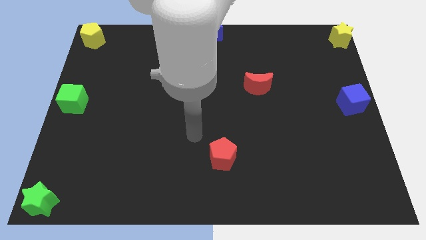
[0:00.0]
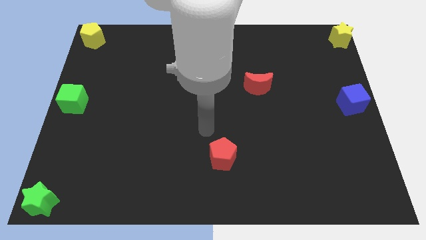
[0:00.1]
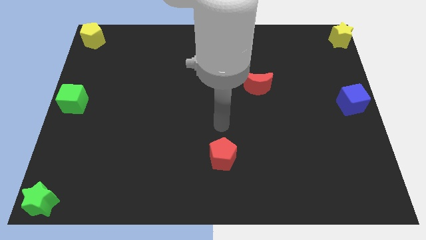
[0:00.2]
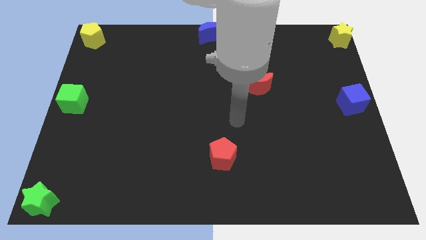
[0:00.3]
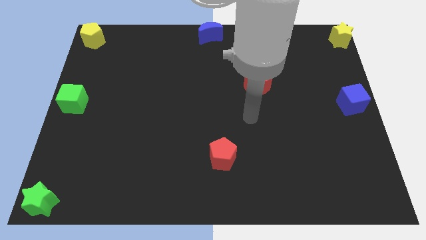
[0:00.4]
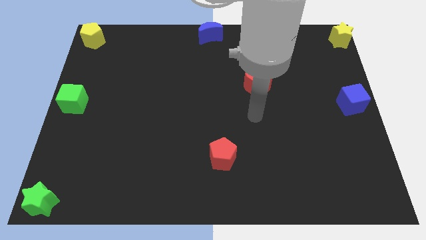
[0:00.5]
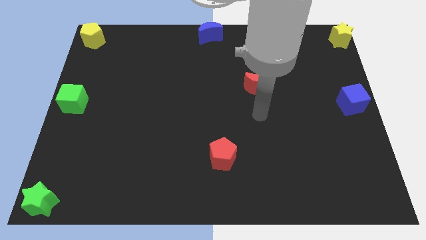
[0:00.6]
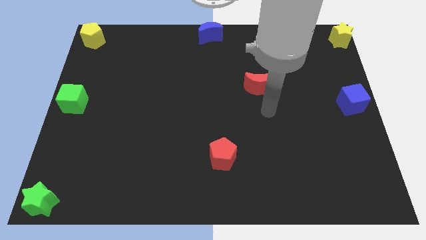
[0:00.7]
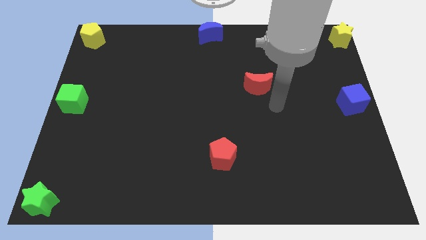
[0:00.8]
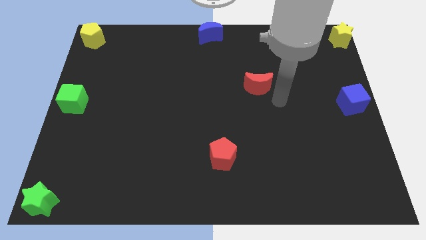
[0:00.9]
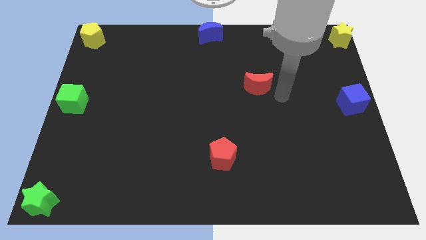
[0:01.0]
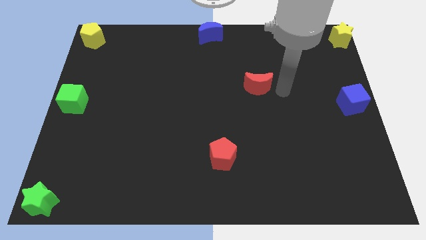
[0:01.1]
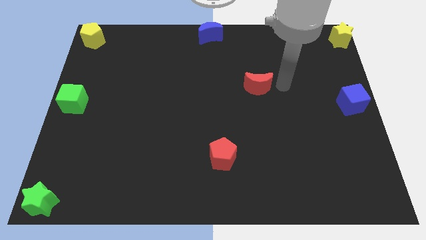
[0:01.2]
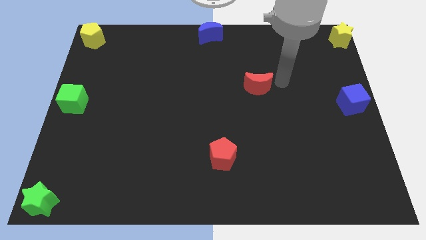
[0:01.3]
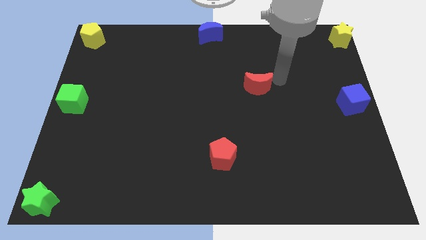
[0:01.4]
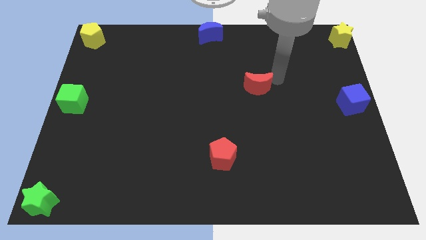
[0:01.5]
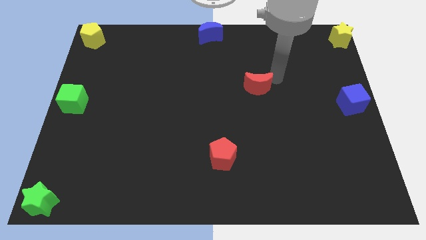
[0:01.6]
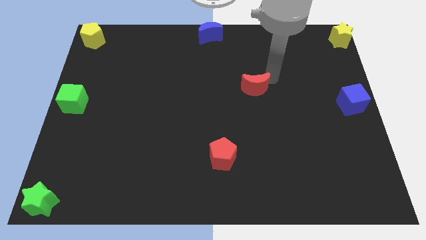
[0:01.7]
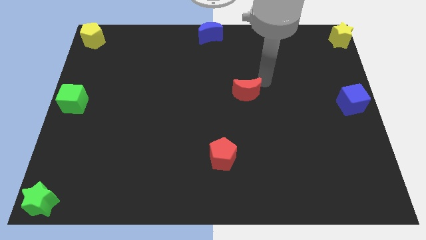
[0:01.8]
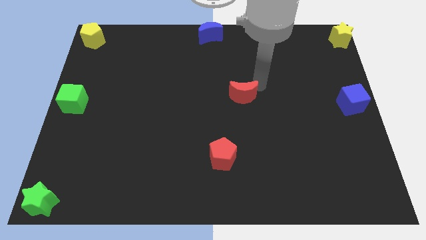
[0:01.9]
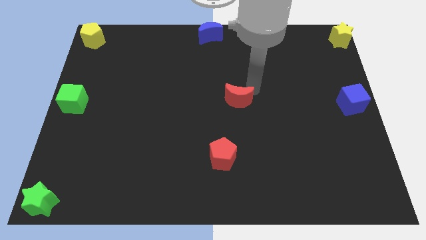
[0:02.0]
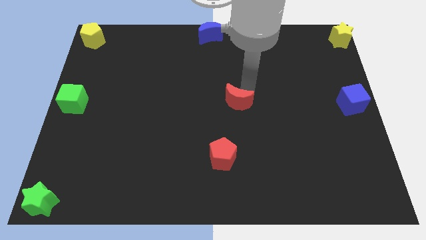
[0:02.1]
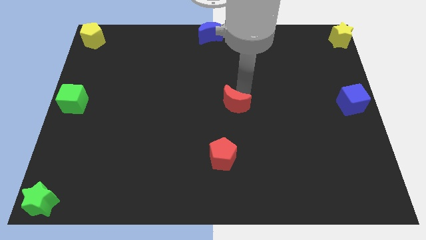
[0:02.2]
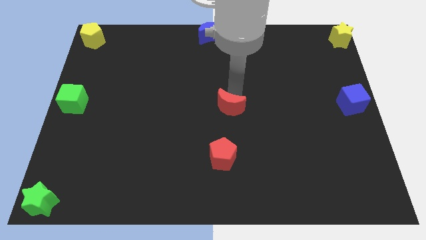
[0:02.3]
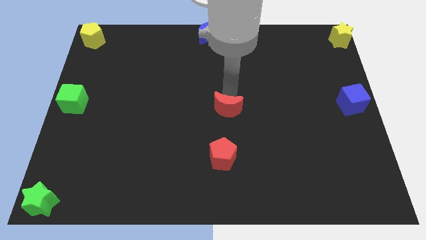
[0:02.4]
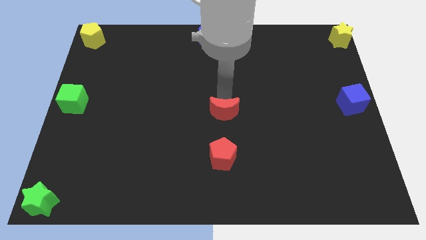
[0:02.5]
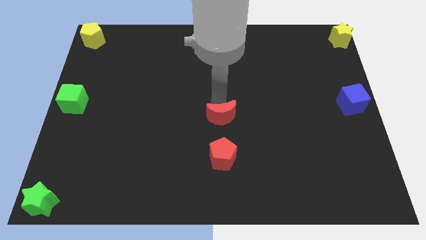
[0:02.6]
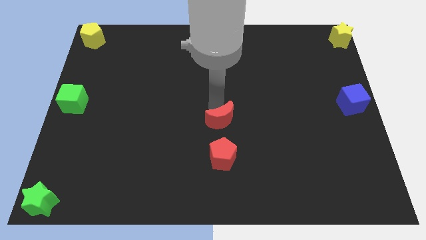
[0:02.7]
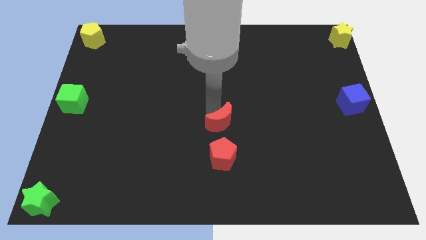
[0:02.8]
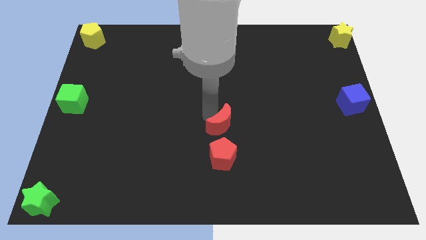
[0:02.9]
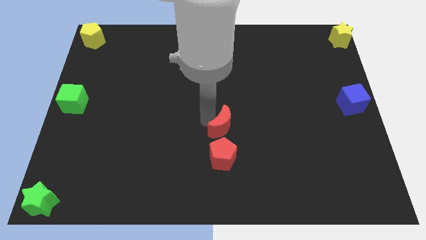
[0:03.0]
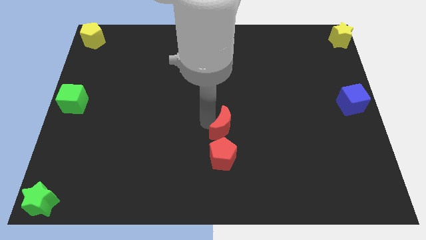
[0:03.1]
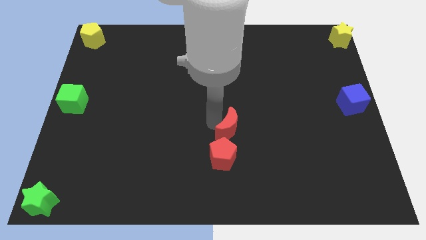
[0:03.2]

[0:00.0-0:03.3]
move the red crescent to the top of red pentagon

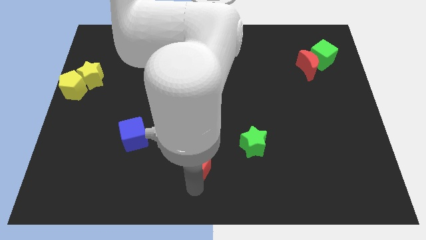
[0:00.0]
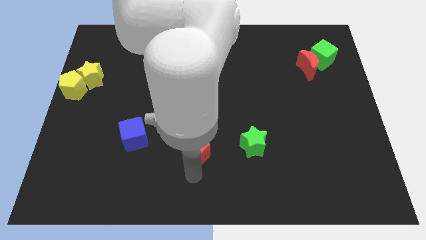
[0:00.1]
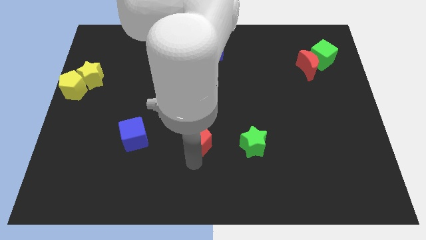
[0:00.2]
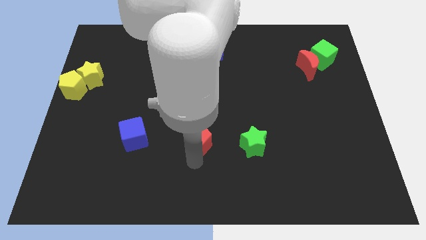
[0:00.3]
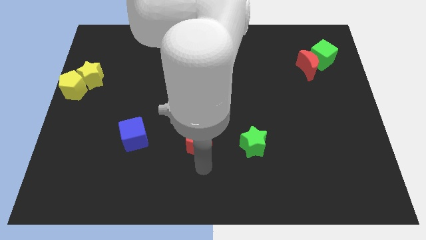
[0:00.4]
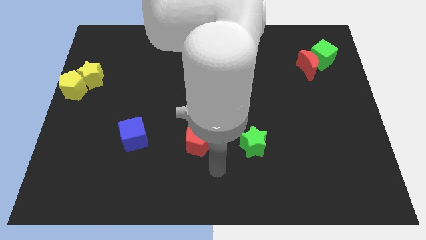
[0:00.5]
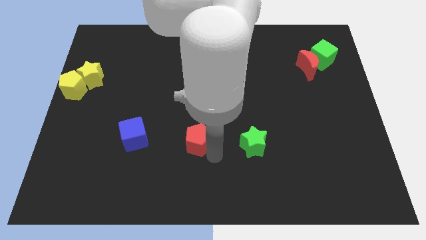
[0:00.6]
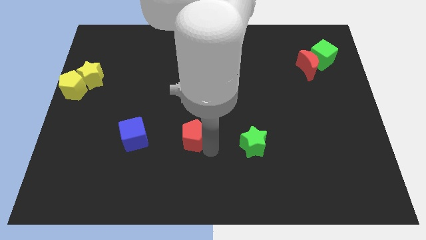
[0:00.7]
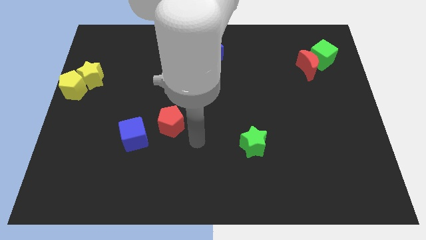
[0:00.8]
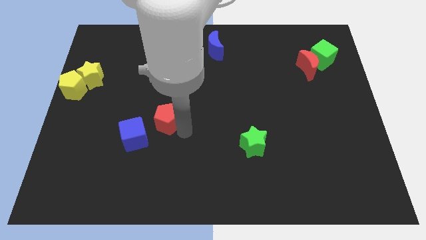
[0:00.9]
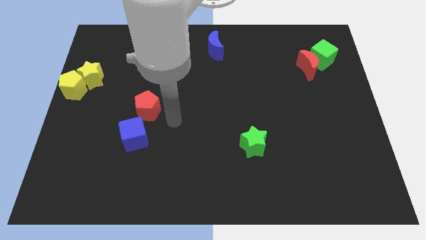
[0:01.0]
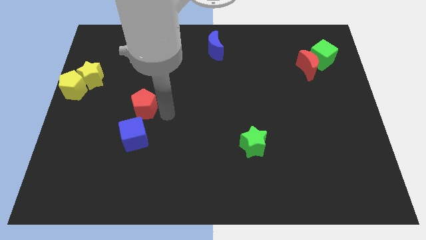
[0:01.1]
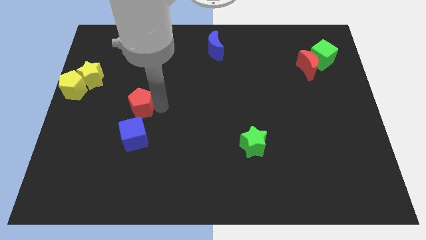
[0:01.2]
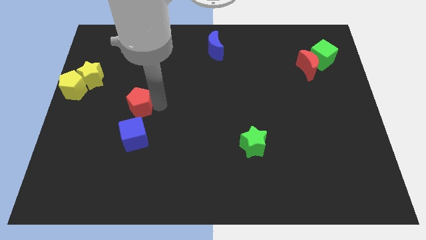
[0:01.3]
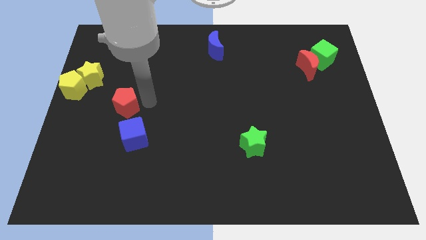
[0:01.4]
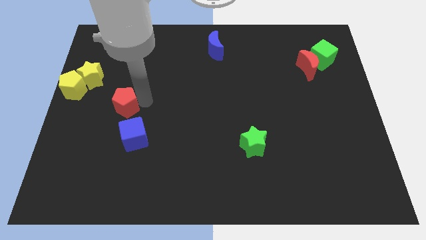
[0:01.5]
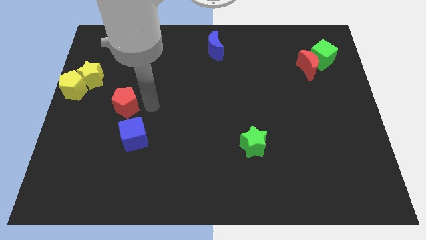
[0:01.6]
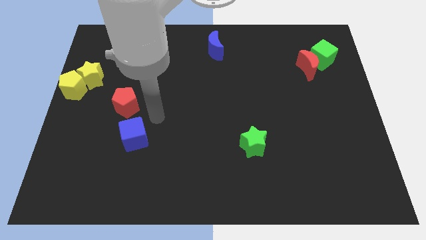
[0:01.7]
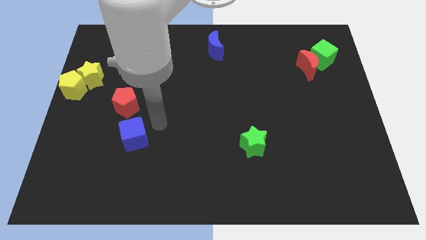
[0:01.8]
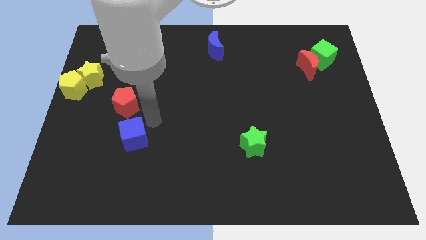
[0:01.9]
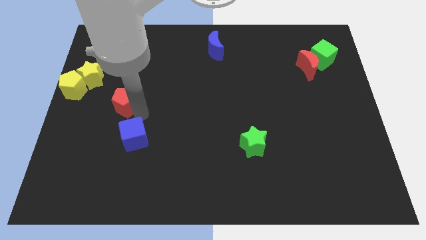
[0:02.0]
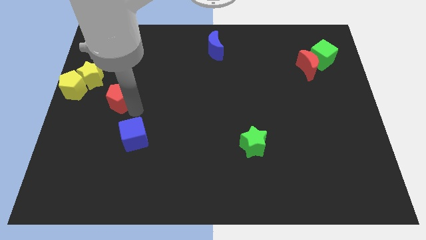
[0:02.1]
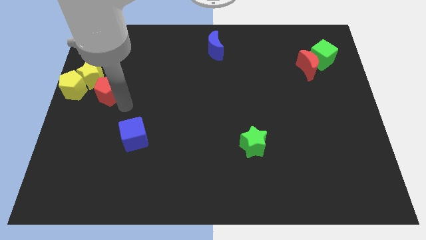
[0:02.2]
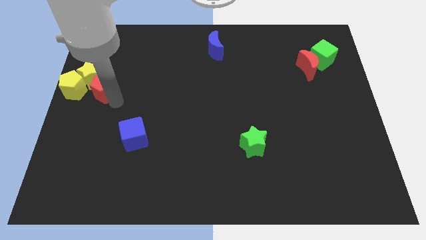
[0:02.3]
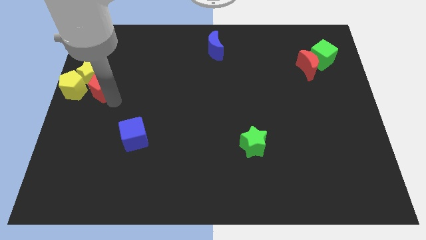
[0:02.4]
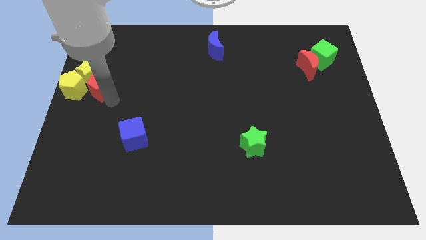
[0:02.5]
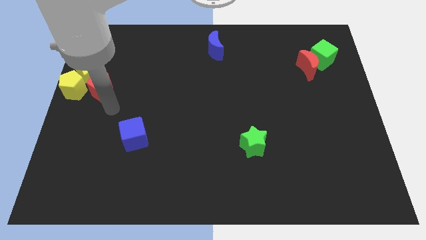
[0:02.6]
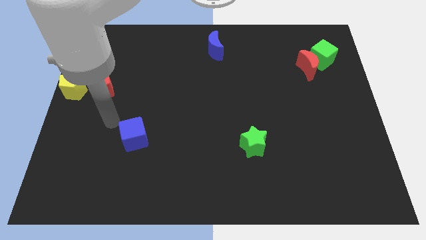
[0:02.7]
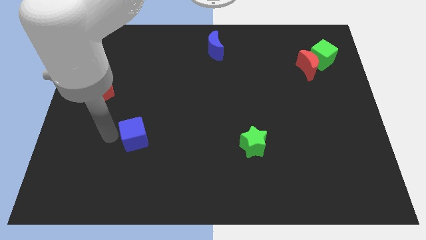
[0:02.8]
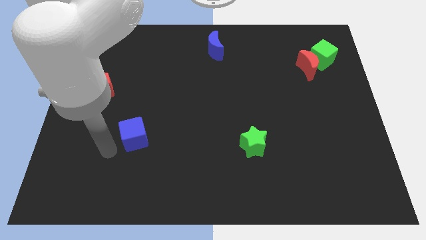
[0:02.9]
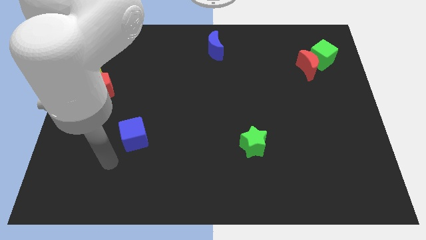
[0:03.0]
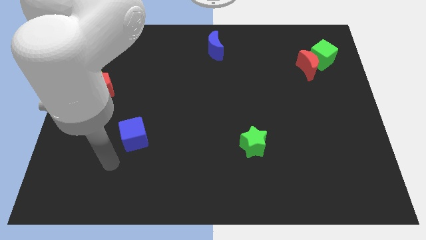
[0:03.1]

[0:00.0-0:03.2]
push red pentagon into the yellow blocks

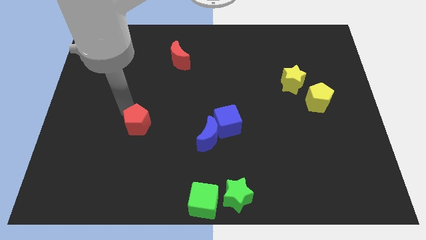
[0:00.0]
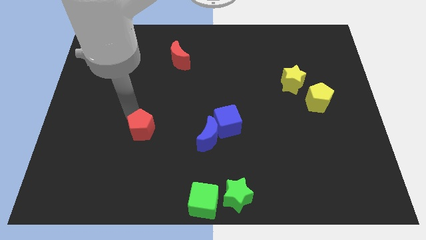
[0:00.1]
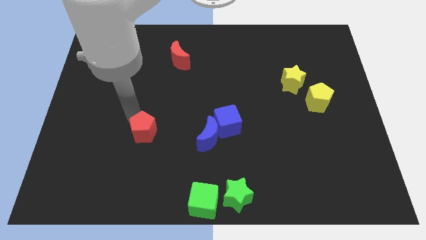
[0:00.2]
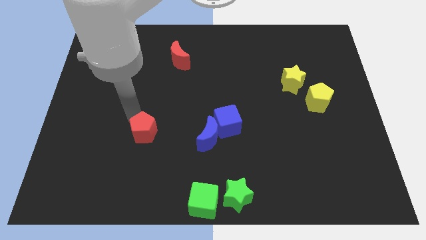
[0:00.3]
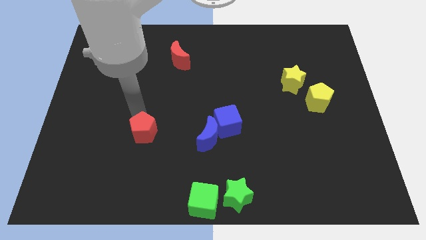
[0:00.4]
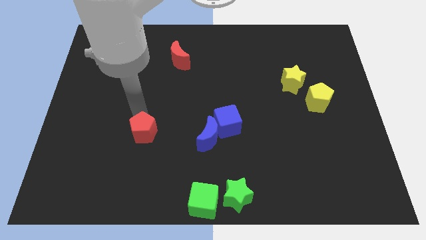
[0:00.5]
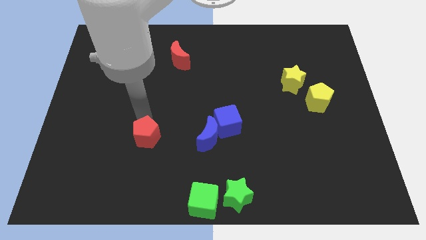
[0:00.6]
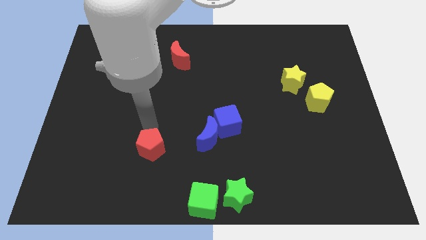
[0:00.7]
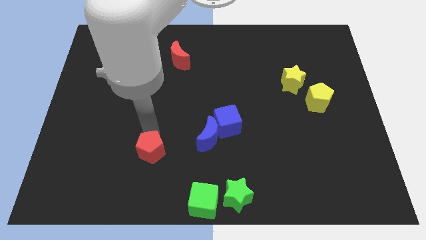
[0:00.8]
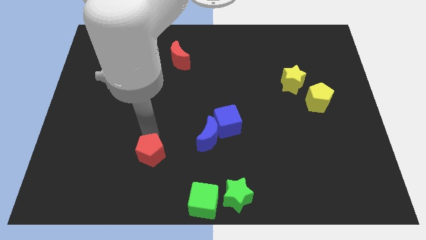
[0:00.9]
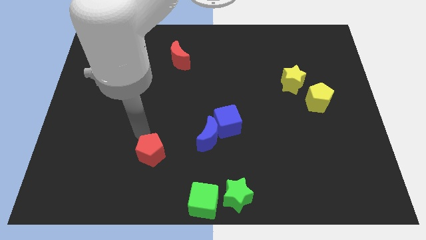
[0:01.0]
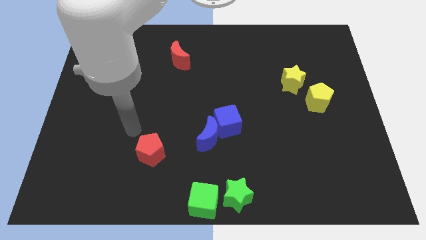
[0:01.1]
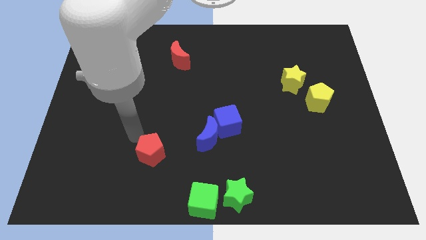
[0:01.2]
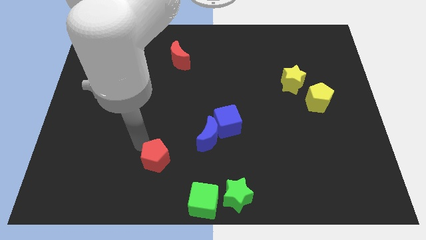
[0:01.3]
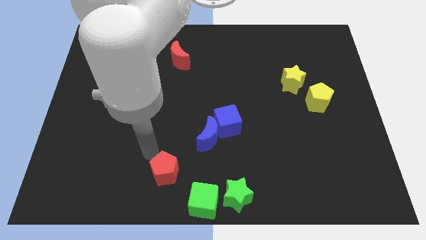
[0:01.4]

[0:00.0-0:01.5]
push the red pentagon slightly downwards

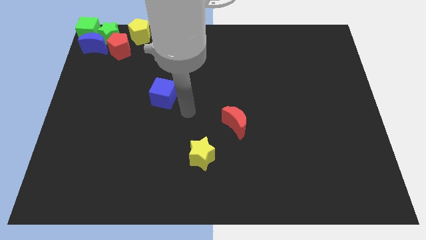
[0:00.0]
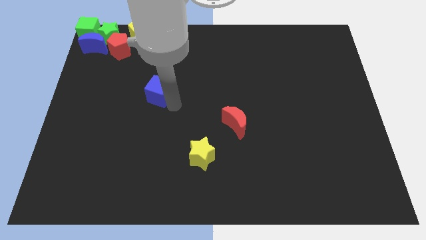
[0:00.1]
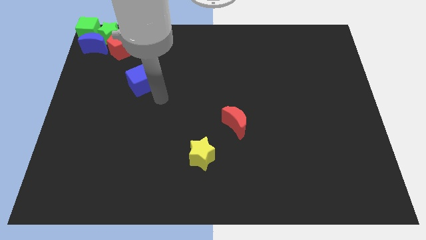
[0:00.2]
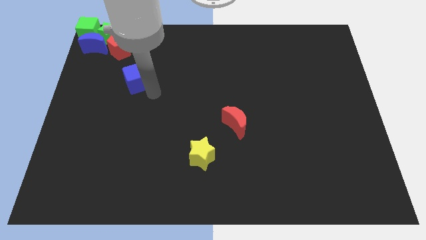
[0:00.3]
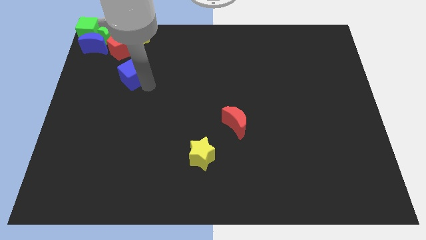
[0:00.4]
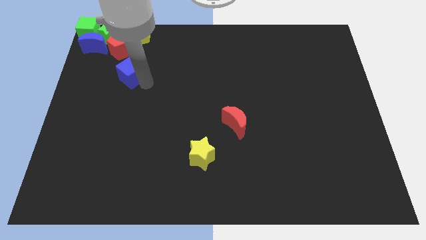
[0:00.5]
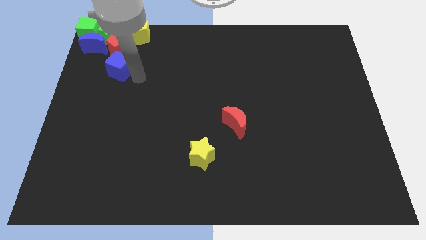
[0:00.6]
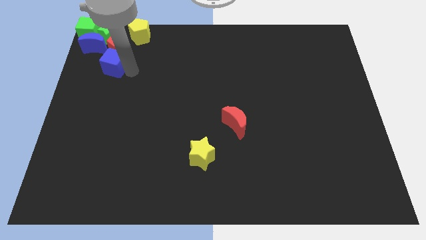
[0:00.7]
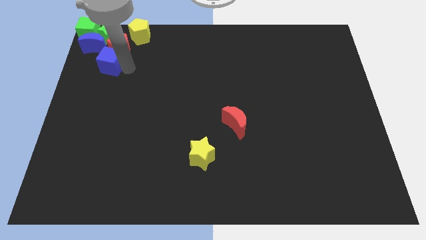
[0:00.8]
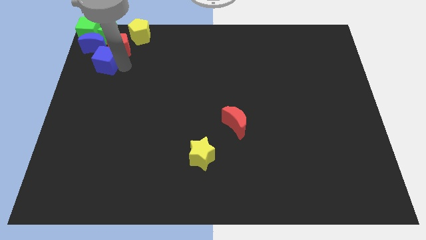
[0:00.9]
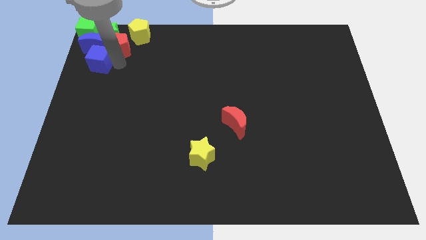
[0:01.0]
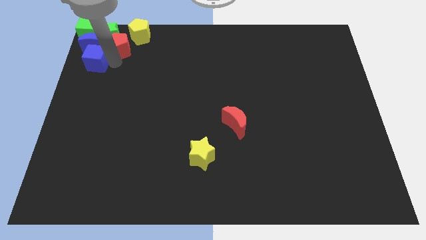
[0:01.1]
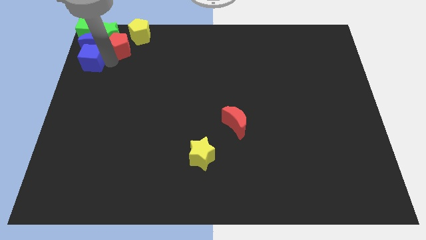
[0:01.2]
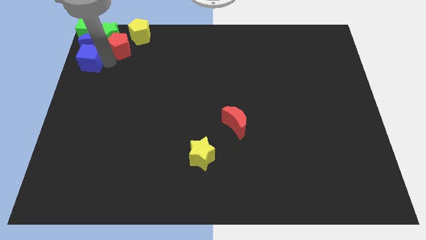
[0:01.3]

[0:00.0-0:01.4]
place blue cube below blue crescent
